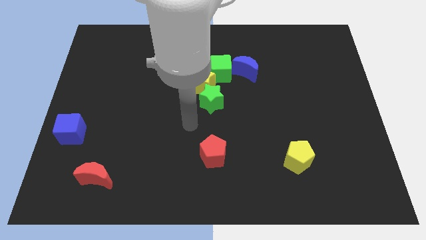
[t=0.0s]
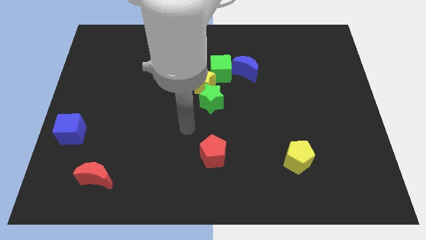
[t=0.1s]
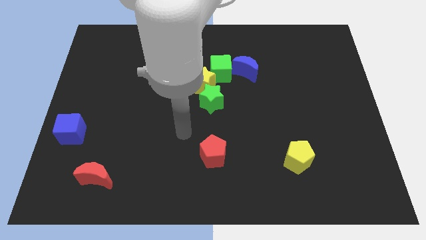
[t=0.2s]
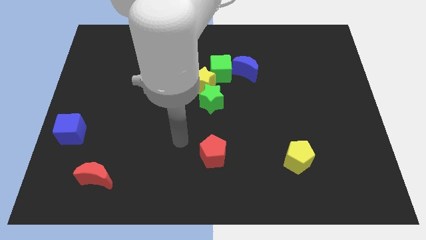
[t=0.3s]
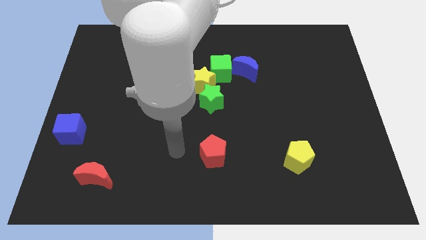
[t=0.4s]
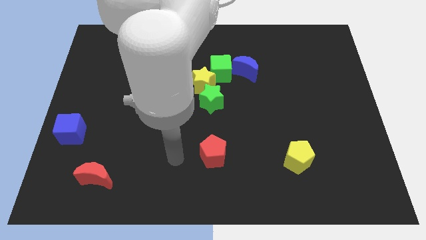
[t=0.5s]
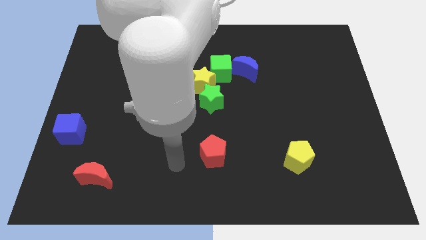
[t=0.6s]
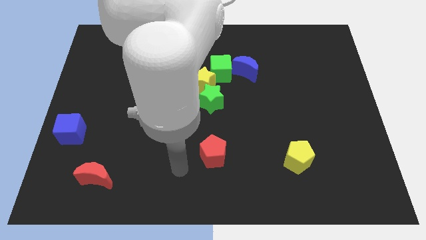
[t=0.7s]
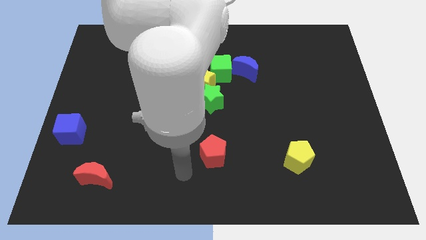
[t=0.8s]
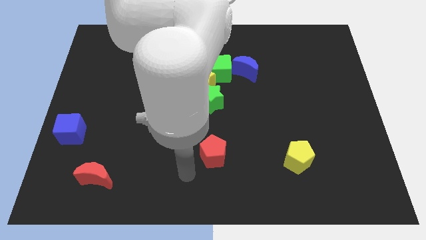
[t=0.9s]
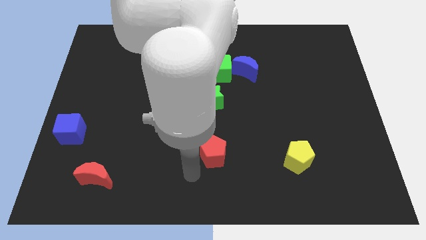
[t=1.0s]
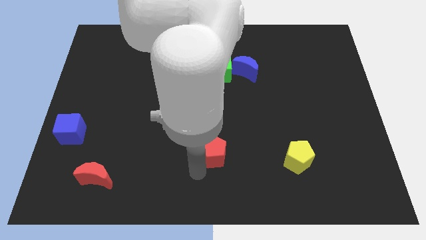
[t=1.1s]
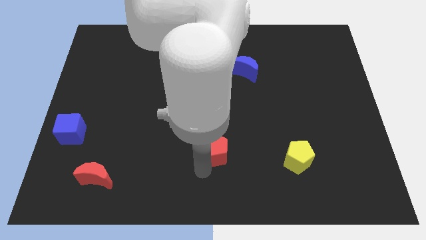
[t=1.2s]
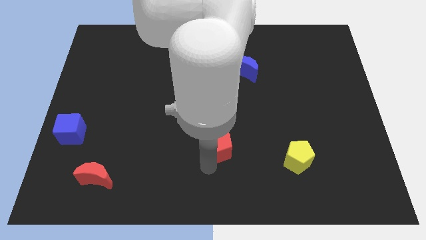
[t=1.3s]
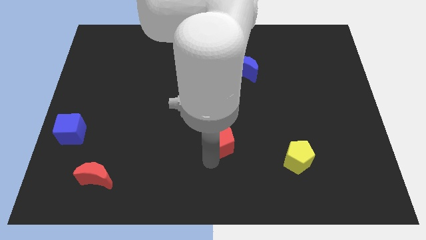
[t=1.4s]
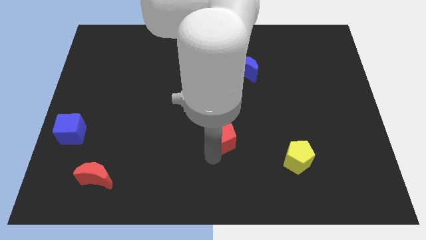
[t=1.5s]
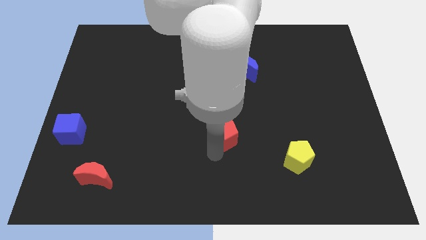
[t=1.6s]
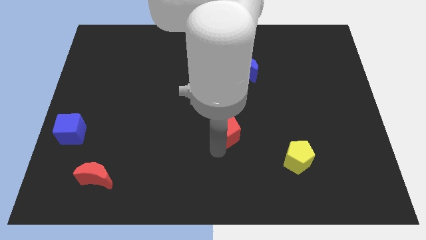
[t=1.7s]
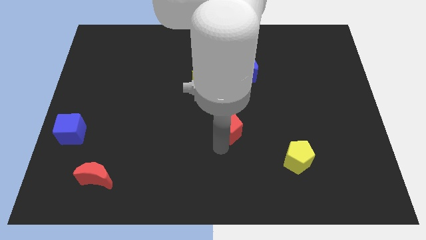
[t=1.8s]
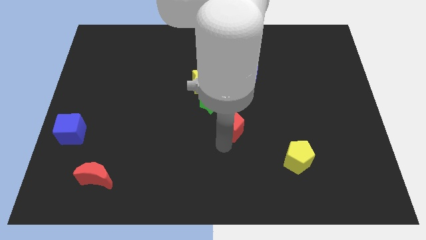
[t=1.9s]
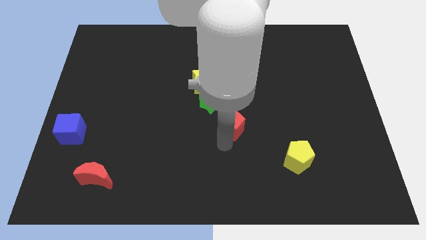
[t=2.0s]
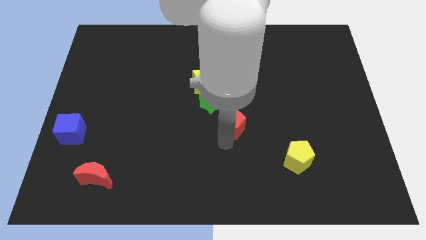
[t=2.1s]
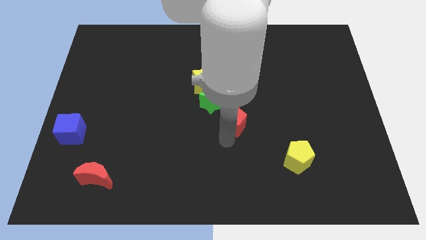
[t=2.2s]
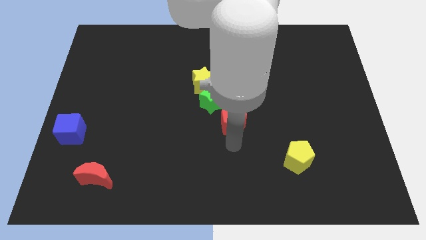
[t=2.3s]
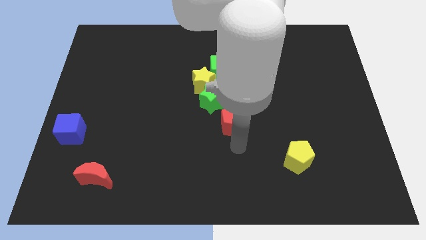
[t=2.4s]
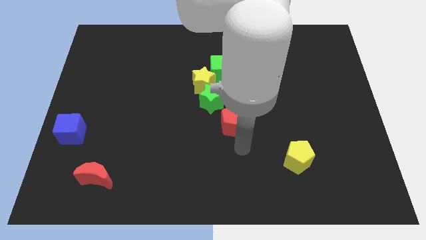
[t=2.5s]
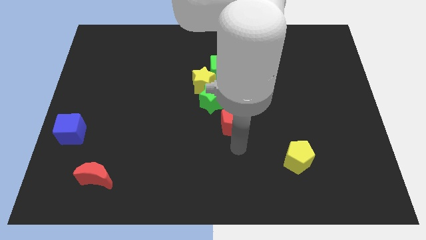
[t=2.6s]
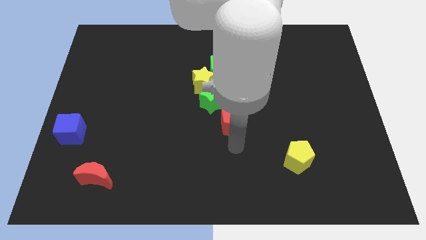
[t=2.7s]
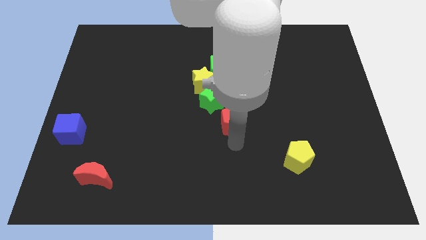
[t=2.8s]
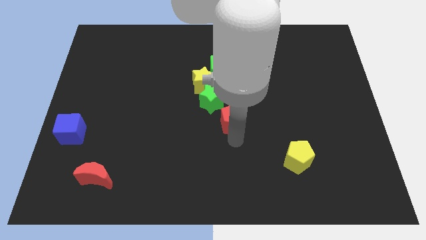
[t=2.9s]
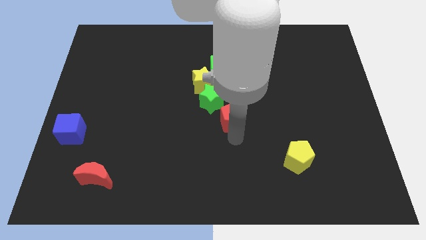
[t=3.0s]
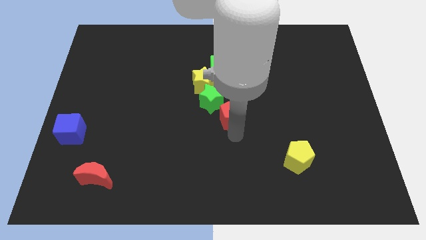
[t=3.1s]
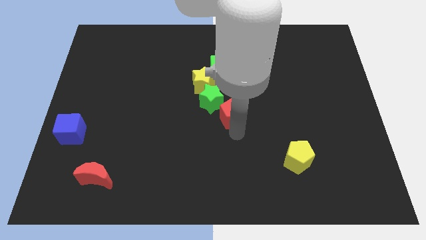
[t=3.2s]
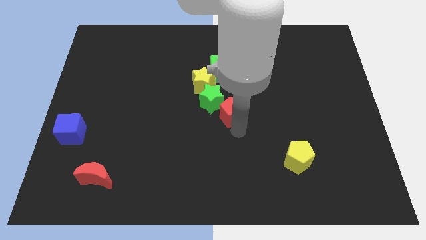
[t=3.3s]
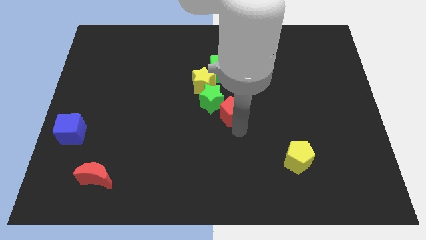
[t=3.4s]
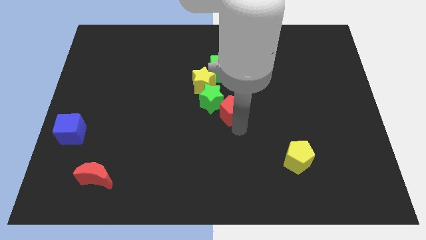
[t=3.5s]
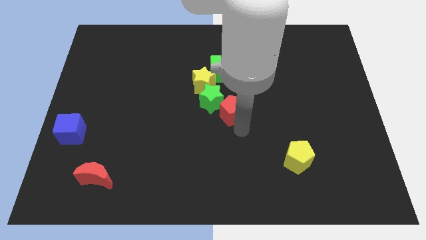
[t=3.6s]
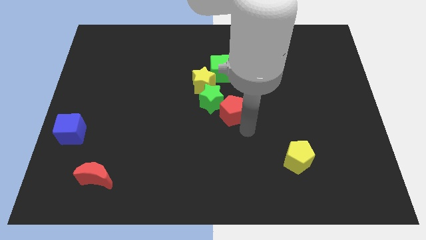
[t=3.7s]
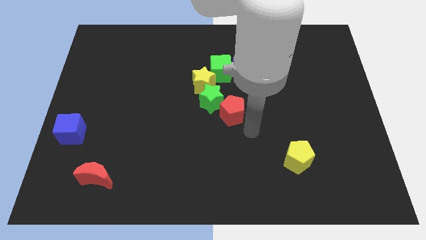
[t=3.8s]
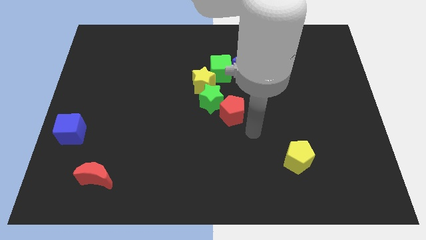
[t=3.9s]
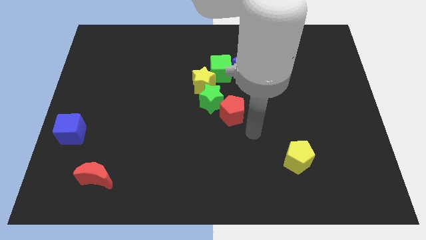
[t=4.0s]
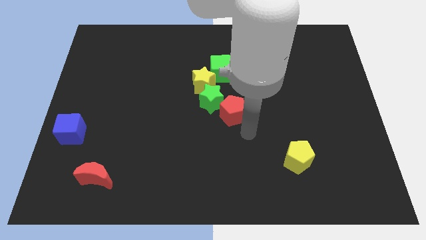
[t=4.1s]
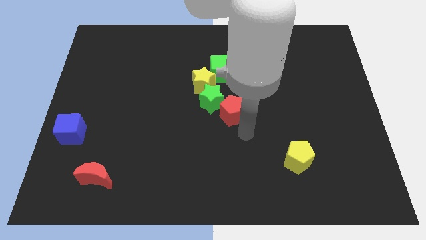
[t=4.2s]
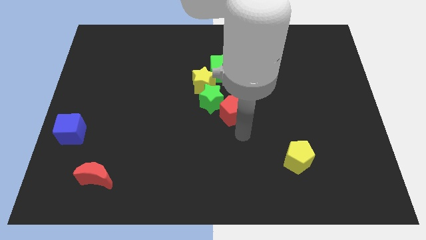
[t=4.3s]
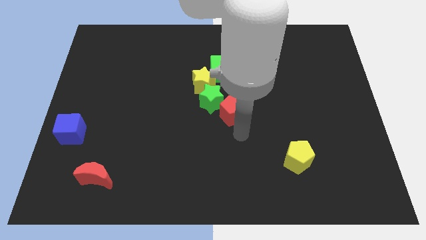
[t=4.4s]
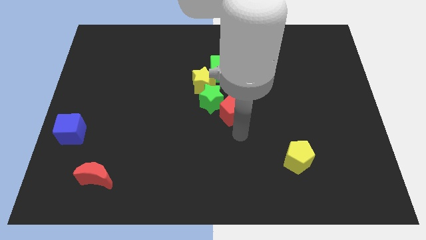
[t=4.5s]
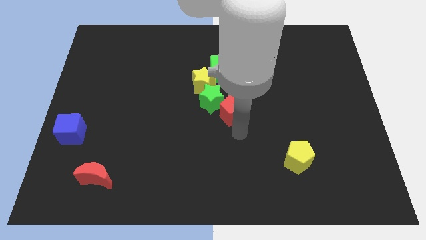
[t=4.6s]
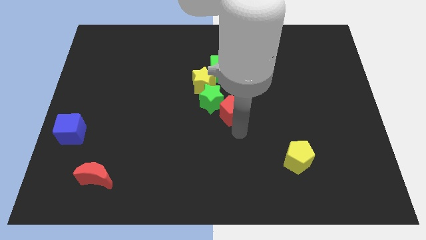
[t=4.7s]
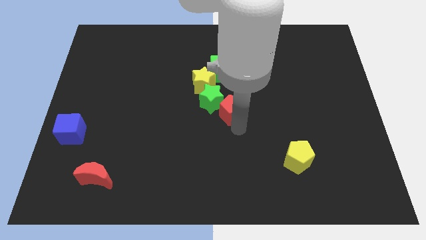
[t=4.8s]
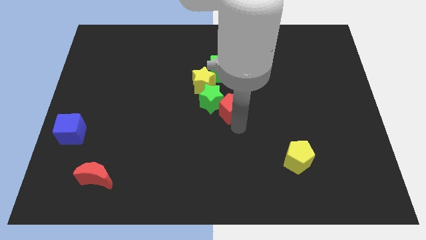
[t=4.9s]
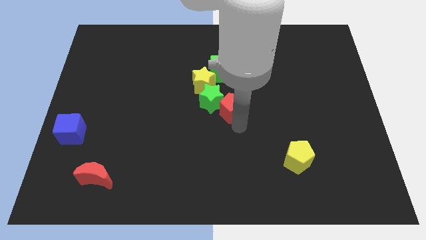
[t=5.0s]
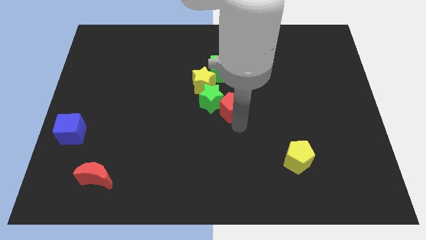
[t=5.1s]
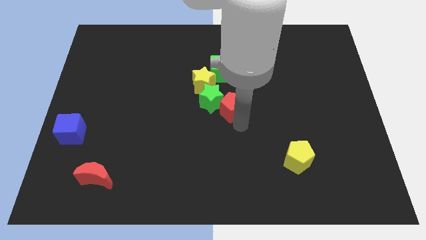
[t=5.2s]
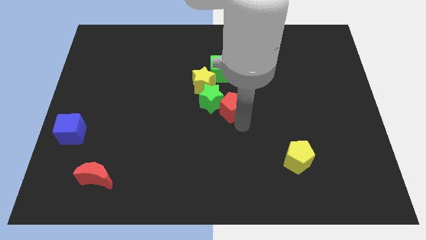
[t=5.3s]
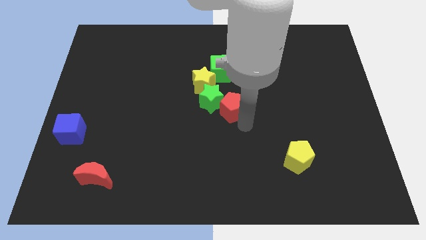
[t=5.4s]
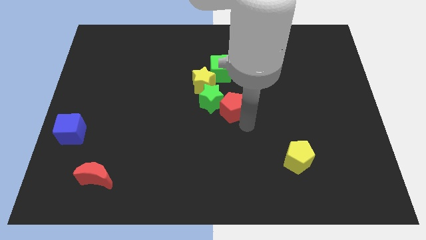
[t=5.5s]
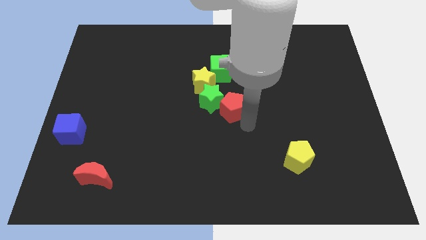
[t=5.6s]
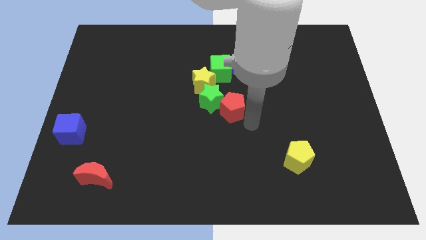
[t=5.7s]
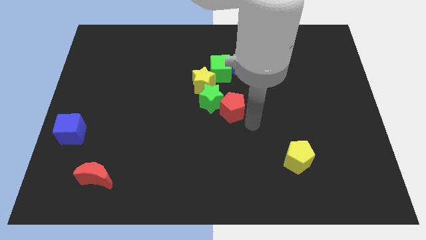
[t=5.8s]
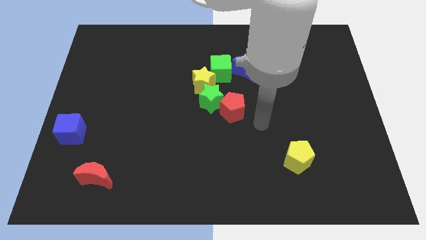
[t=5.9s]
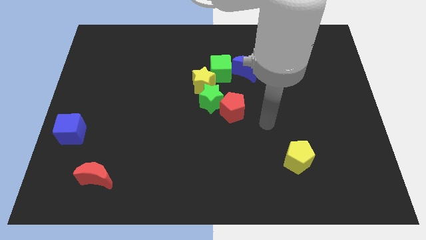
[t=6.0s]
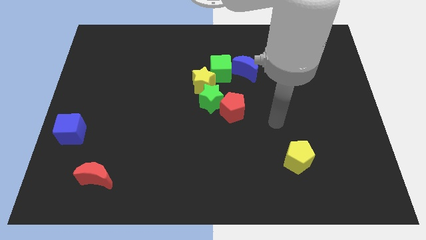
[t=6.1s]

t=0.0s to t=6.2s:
move the red pentagon into the green star

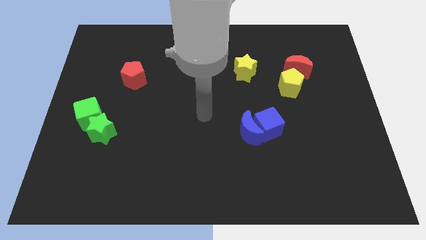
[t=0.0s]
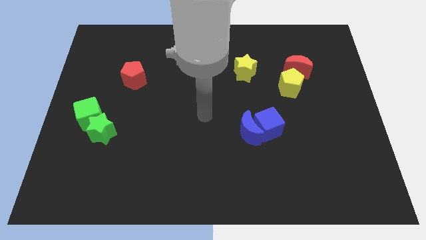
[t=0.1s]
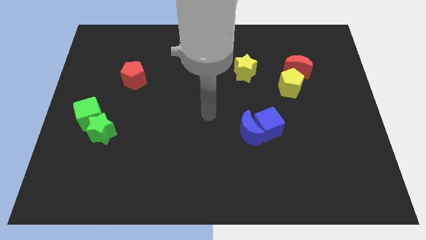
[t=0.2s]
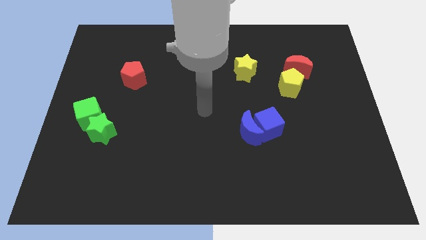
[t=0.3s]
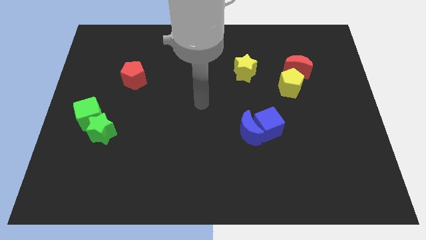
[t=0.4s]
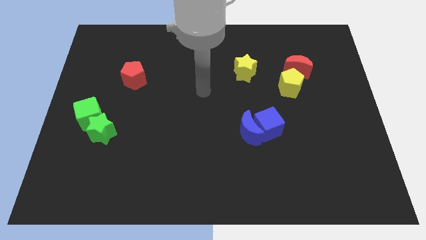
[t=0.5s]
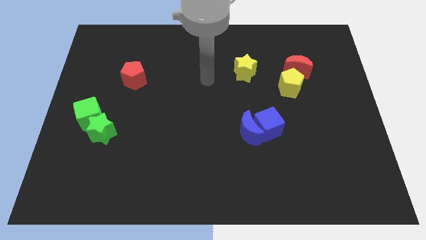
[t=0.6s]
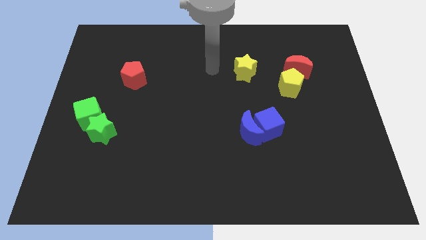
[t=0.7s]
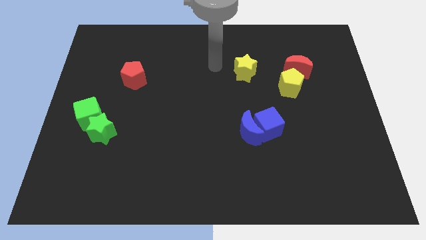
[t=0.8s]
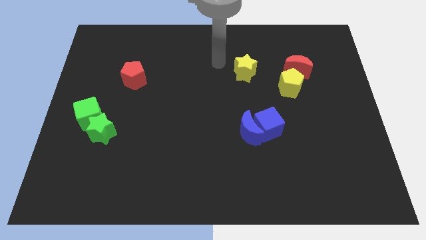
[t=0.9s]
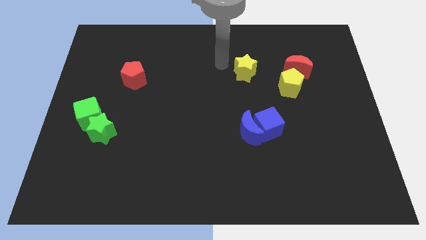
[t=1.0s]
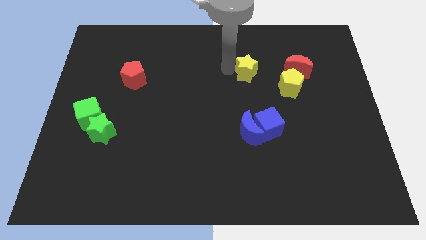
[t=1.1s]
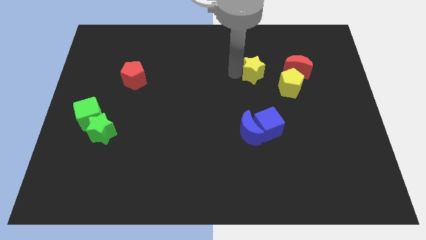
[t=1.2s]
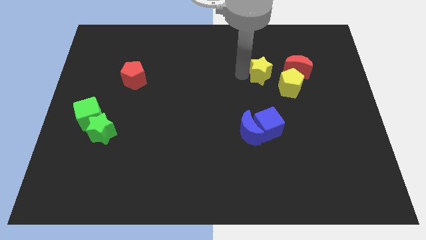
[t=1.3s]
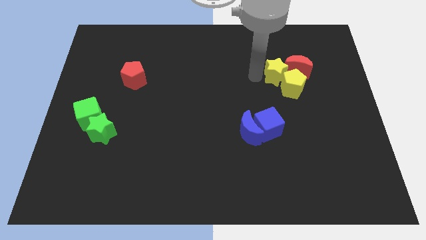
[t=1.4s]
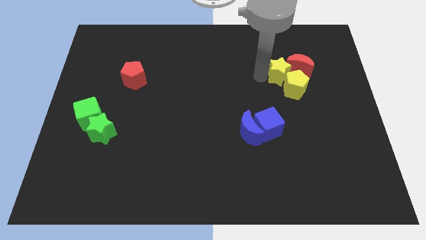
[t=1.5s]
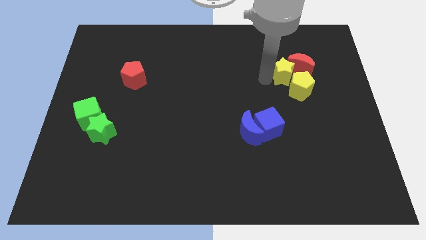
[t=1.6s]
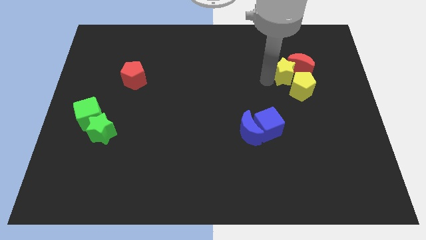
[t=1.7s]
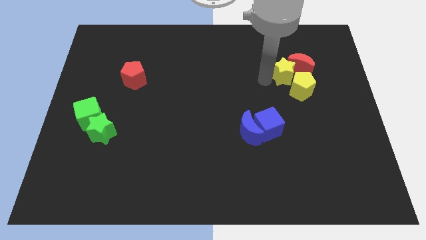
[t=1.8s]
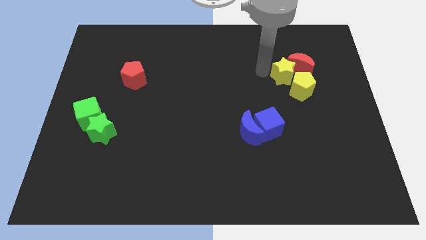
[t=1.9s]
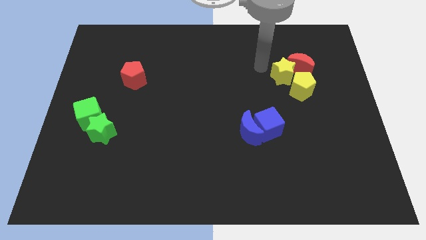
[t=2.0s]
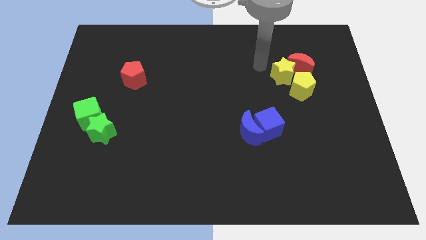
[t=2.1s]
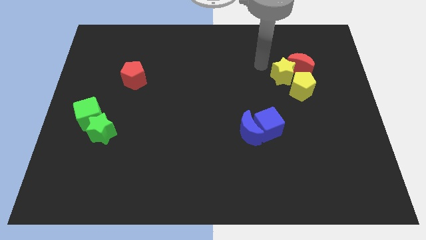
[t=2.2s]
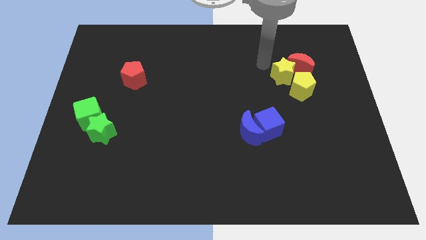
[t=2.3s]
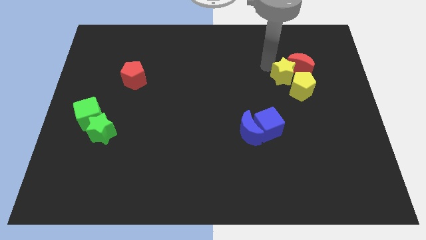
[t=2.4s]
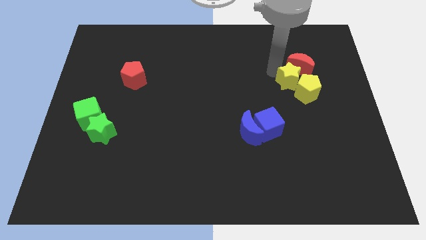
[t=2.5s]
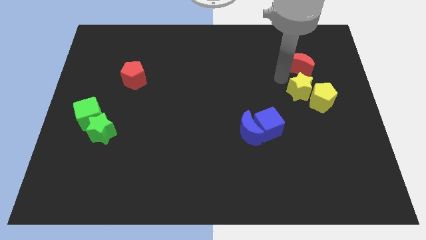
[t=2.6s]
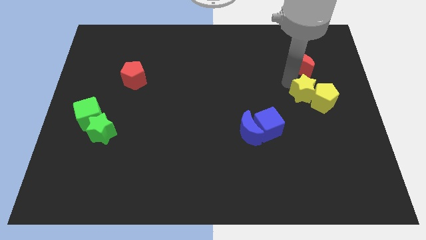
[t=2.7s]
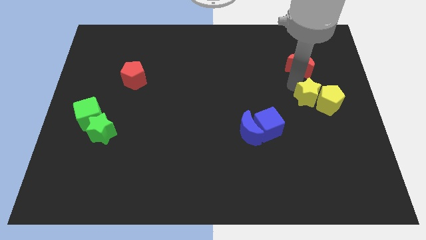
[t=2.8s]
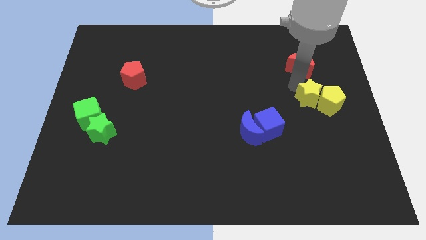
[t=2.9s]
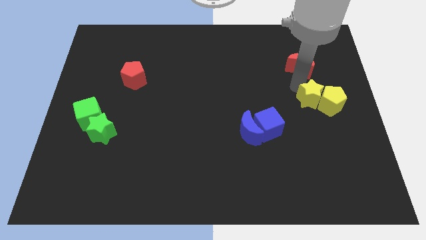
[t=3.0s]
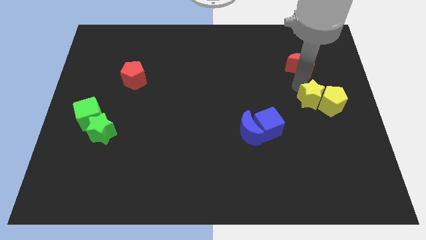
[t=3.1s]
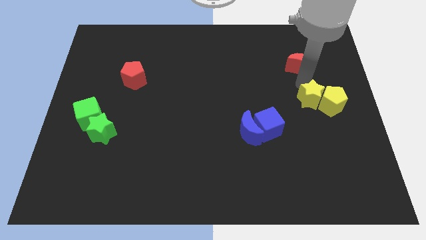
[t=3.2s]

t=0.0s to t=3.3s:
move the yellow star to the right center of the board
